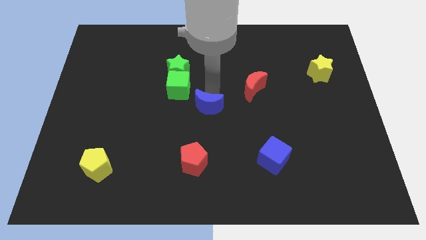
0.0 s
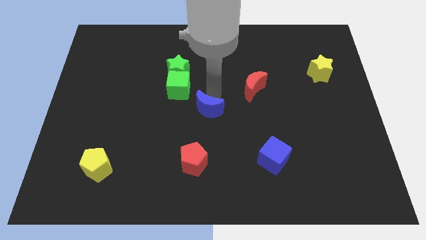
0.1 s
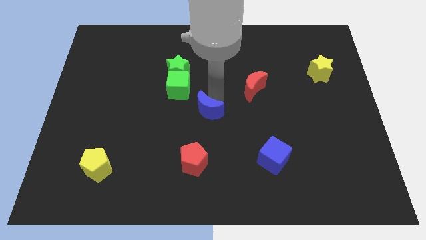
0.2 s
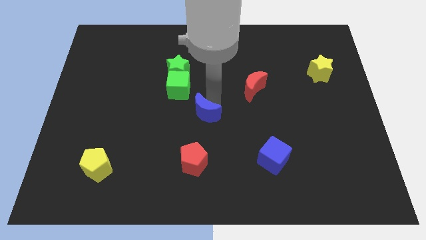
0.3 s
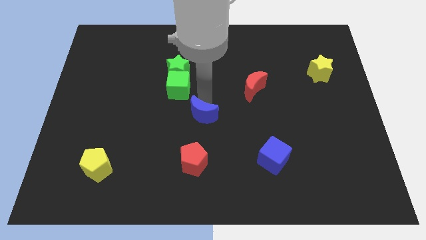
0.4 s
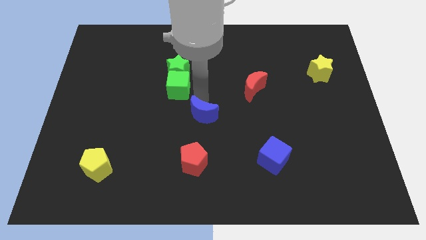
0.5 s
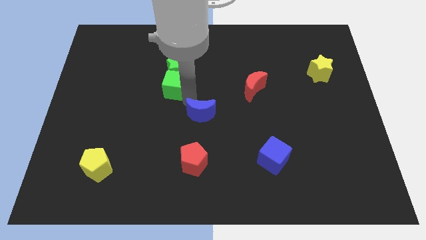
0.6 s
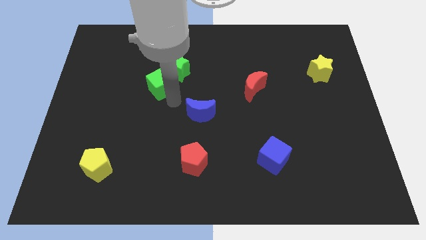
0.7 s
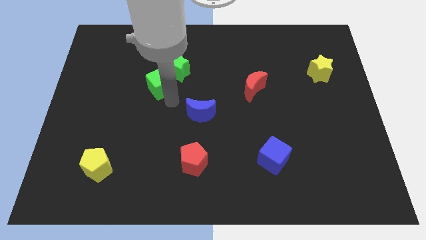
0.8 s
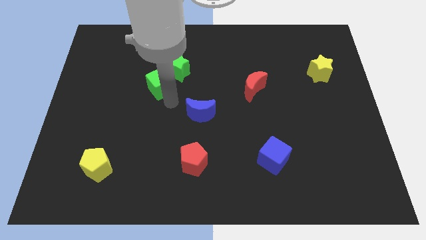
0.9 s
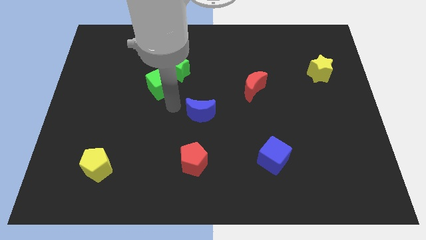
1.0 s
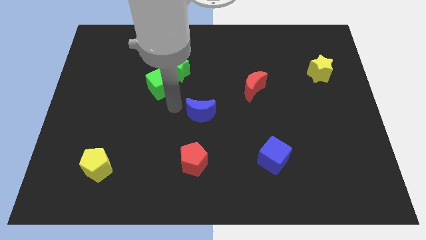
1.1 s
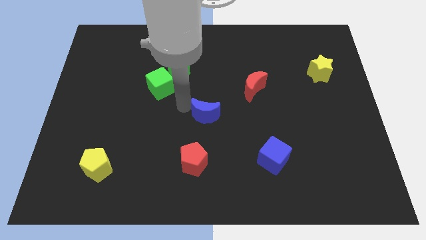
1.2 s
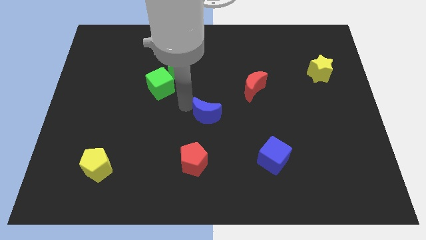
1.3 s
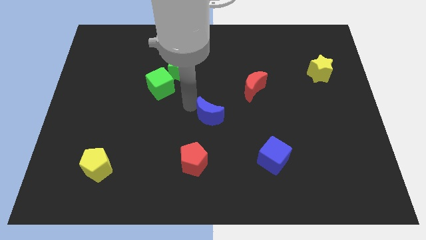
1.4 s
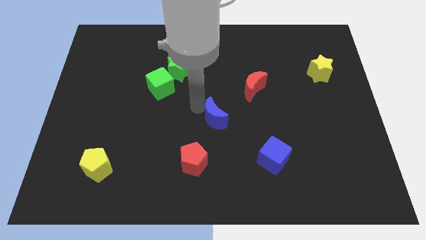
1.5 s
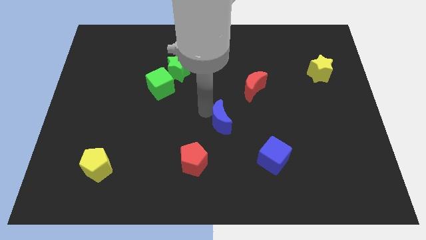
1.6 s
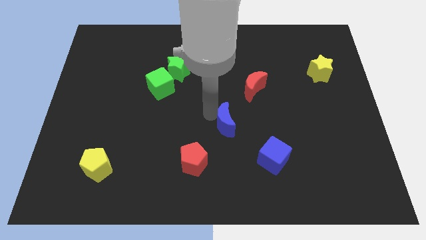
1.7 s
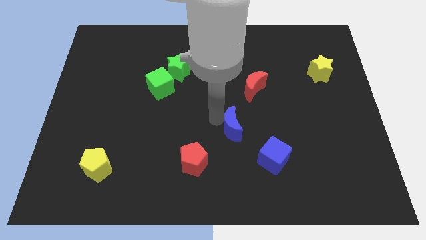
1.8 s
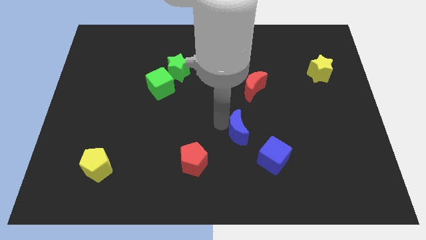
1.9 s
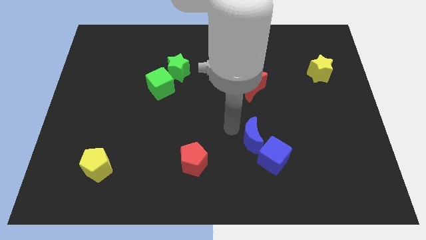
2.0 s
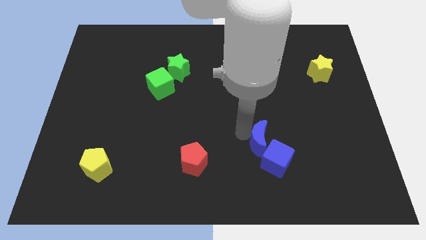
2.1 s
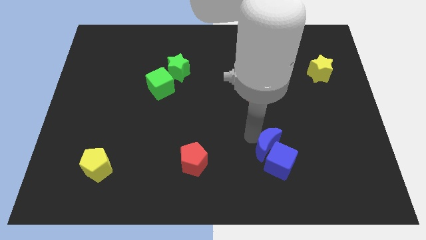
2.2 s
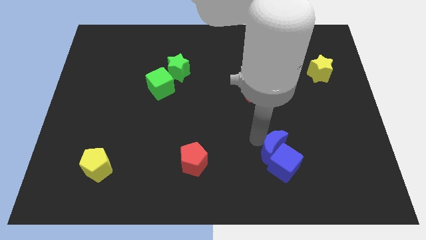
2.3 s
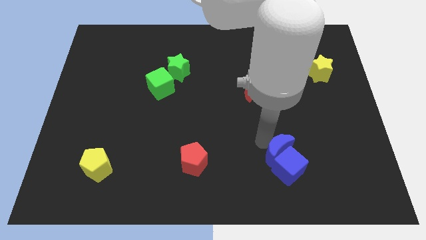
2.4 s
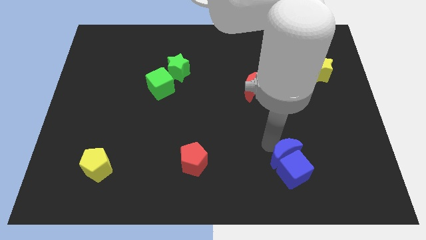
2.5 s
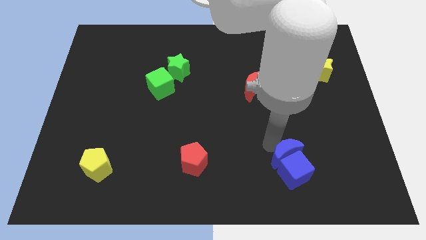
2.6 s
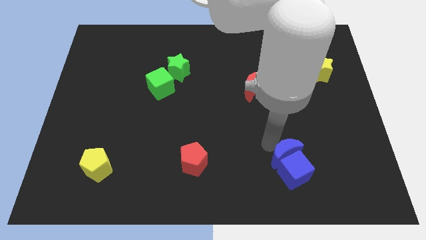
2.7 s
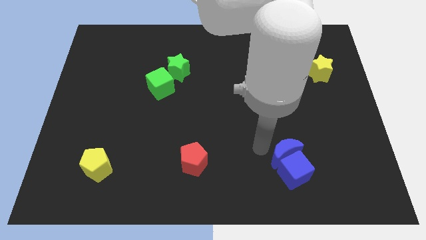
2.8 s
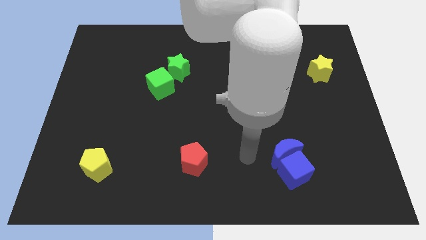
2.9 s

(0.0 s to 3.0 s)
push blue moon into the blue cube

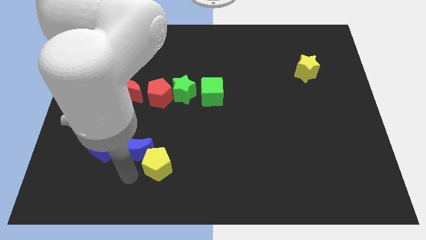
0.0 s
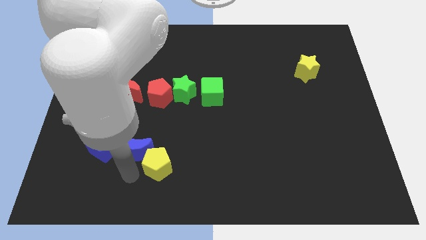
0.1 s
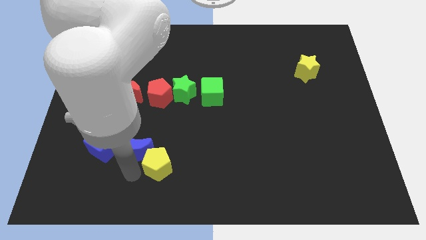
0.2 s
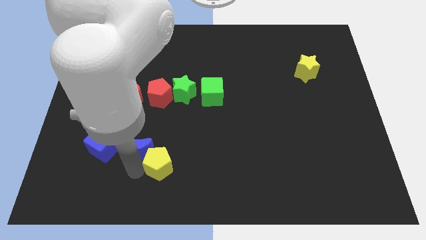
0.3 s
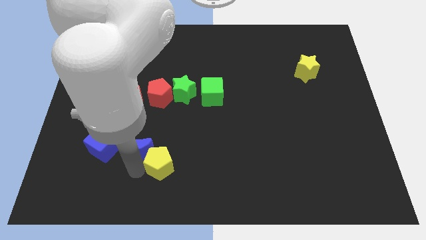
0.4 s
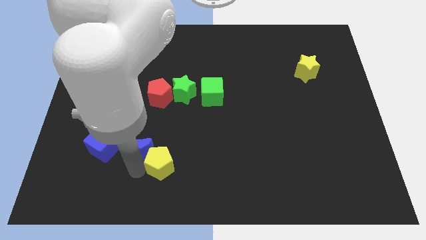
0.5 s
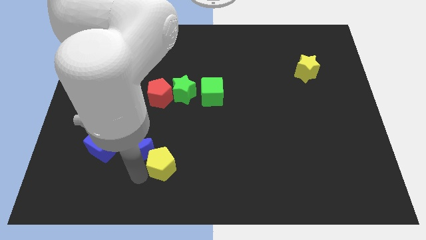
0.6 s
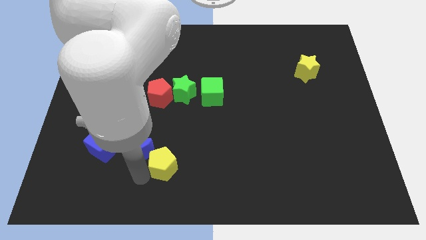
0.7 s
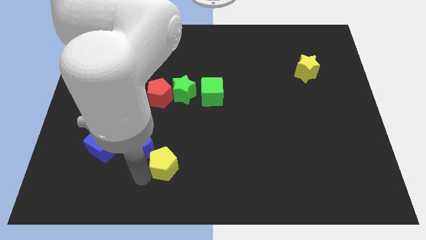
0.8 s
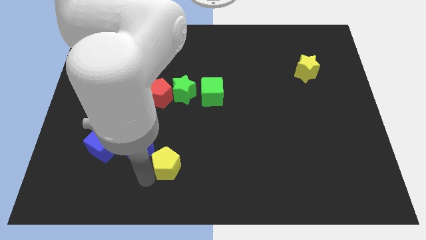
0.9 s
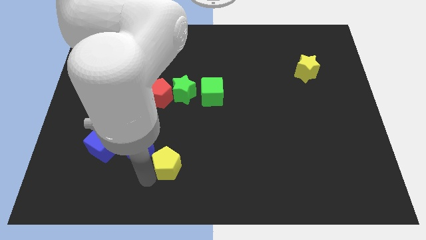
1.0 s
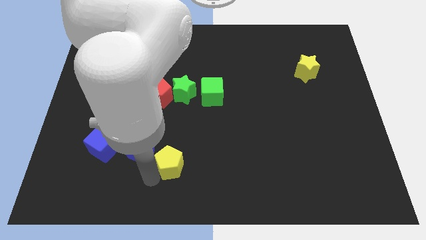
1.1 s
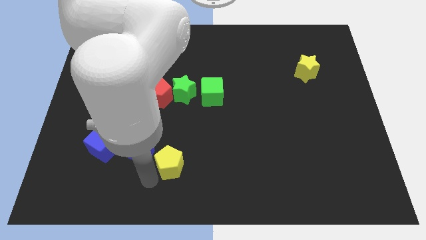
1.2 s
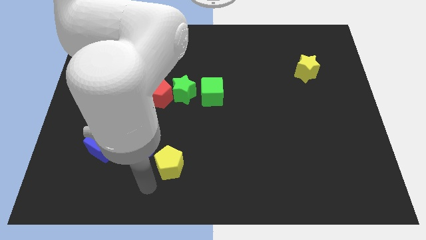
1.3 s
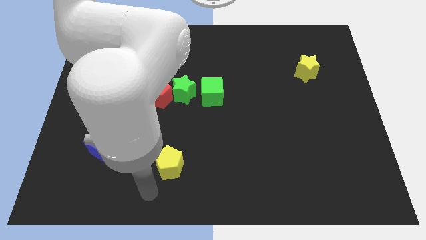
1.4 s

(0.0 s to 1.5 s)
separate the yellow pentagon from the blue crescent

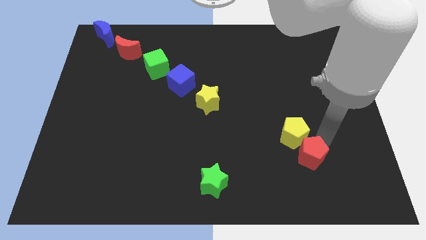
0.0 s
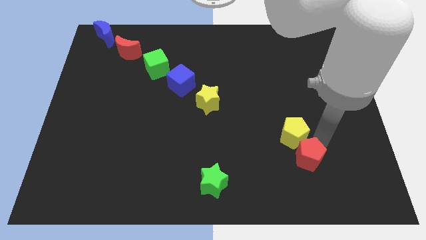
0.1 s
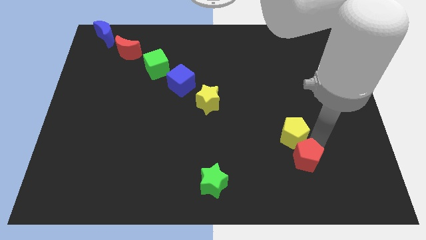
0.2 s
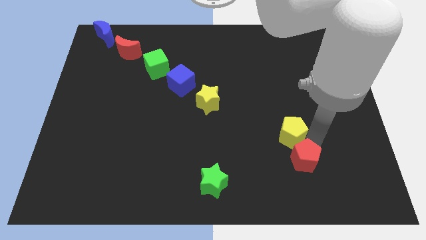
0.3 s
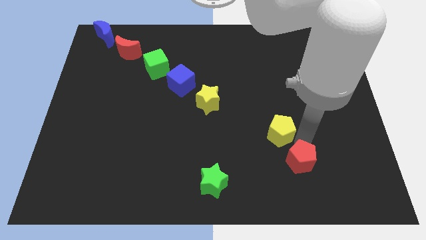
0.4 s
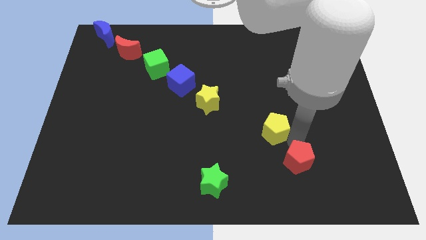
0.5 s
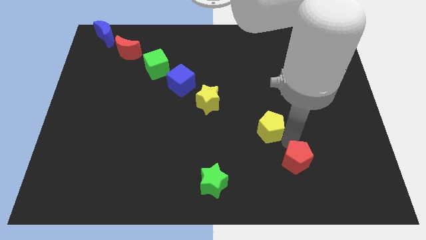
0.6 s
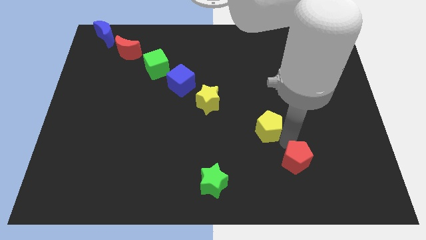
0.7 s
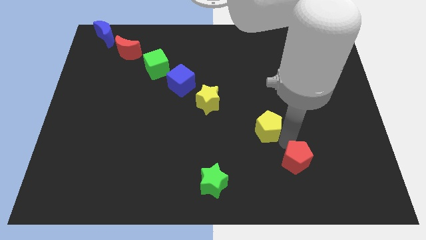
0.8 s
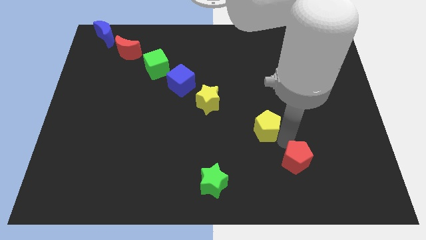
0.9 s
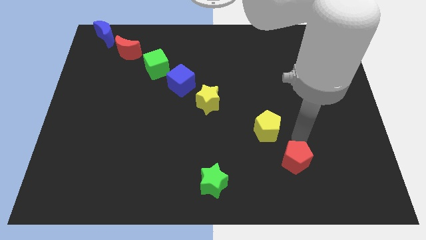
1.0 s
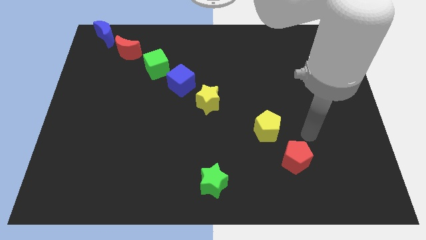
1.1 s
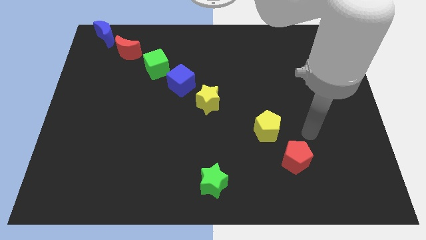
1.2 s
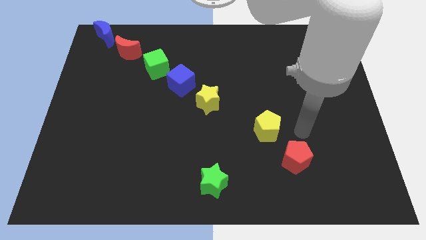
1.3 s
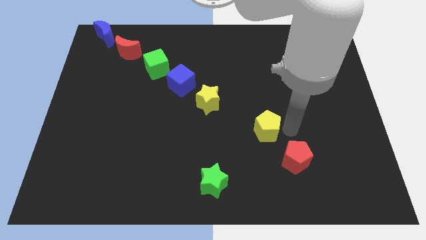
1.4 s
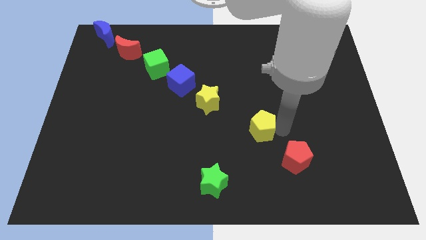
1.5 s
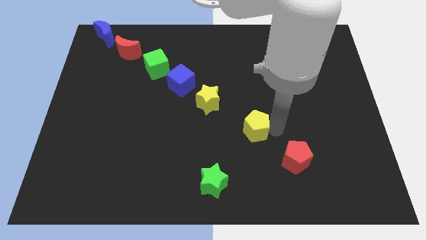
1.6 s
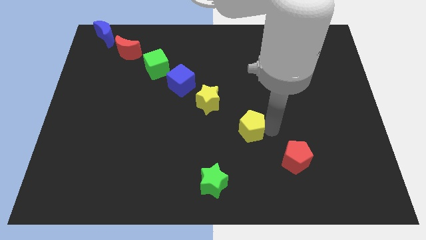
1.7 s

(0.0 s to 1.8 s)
separate red and the yellow pentagon

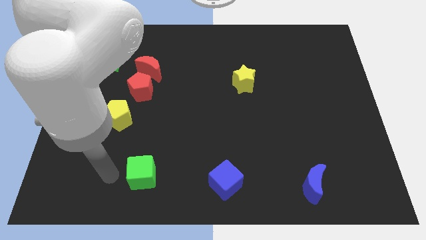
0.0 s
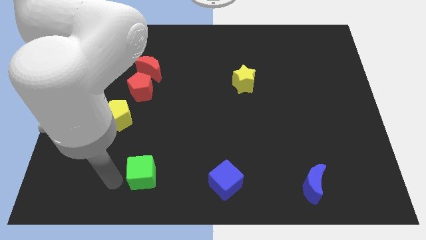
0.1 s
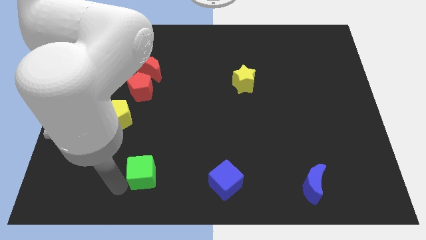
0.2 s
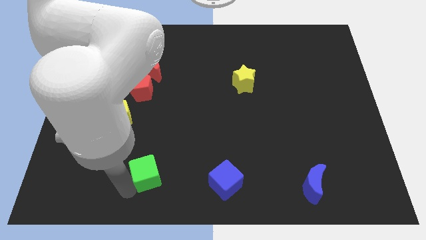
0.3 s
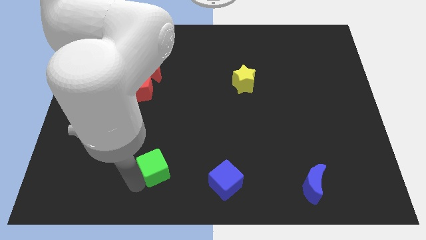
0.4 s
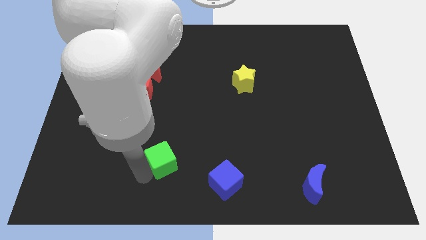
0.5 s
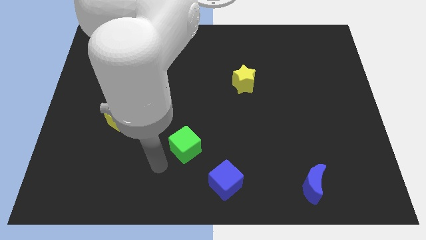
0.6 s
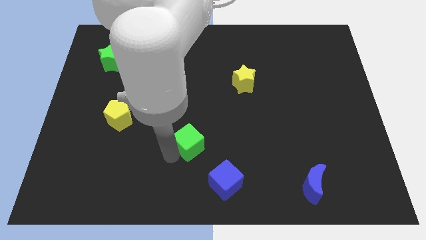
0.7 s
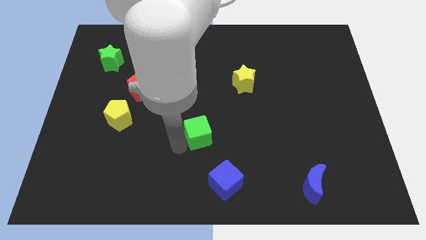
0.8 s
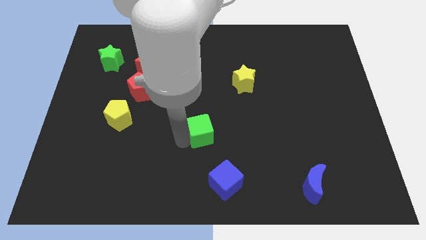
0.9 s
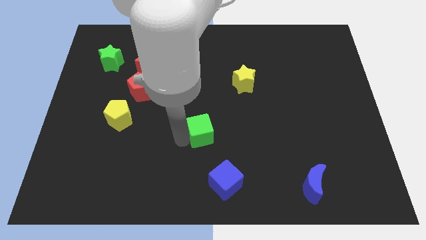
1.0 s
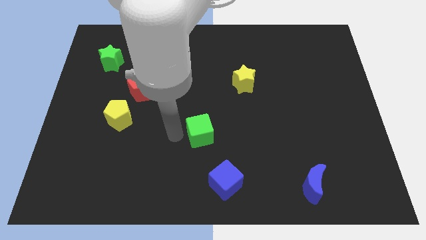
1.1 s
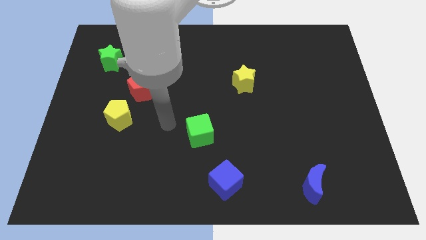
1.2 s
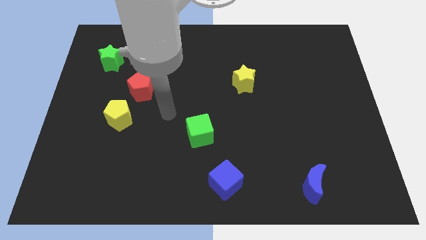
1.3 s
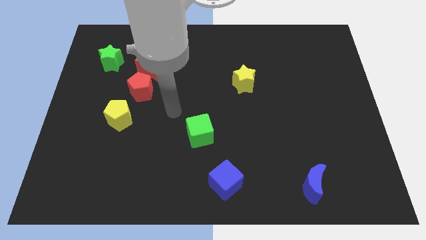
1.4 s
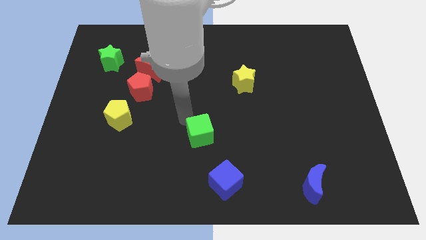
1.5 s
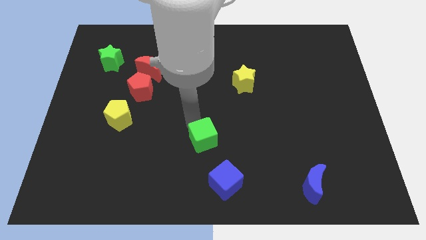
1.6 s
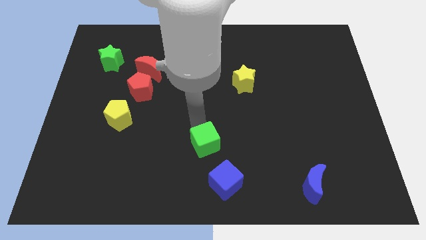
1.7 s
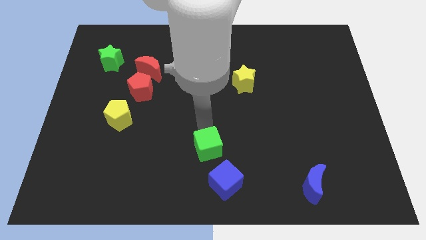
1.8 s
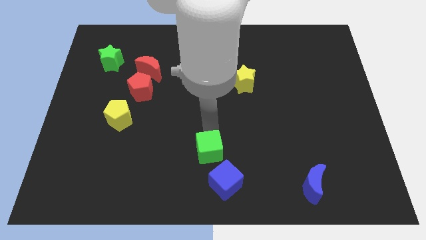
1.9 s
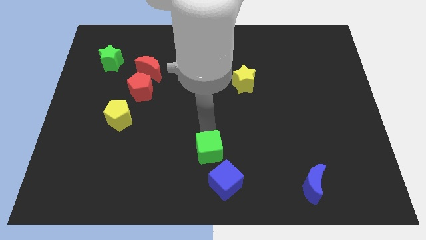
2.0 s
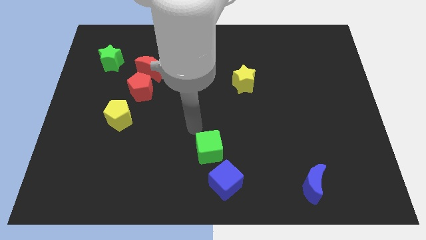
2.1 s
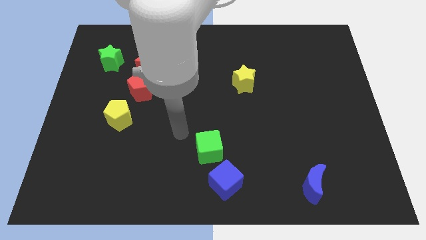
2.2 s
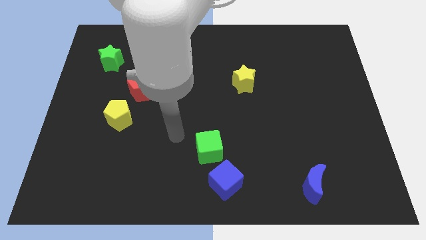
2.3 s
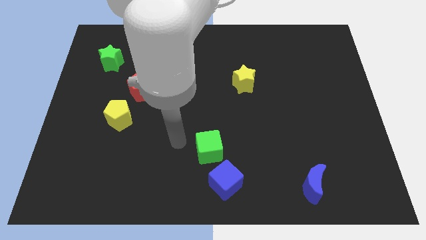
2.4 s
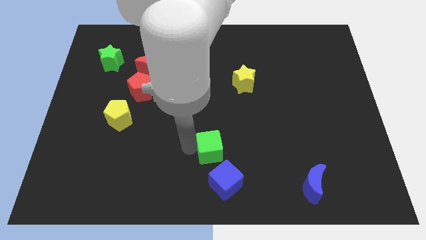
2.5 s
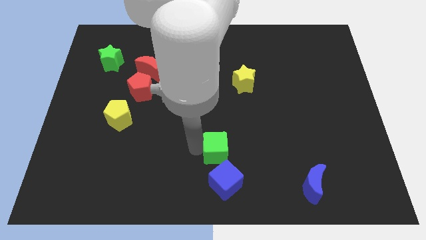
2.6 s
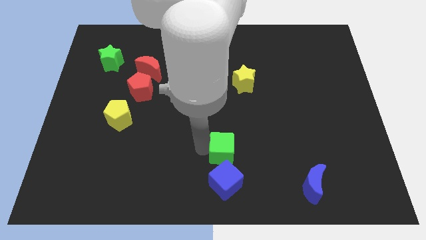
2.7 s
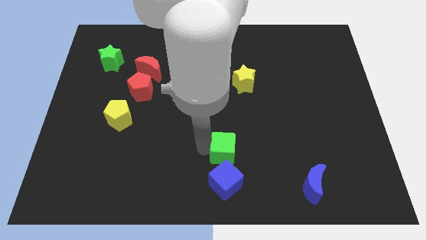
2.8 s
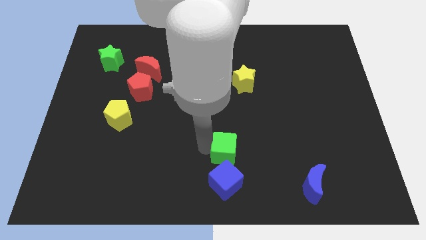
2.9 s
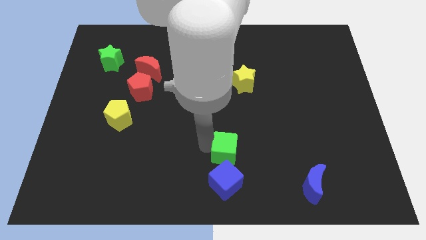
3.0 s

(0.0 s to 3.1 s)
push the green cube to the top of blue cube
